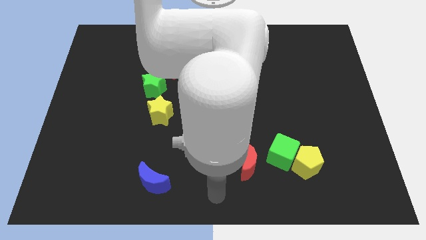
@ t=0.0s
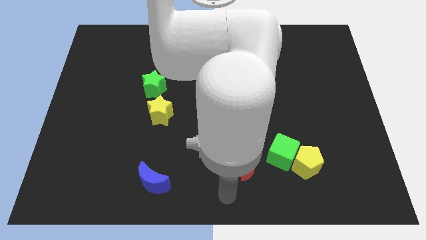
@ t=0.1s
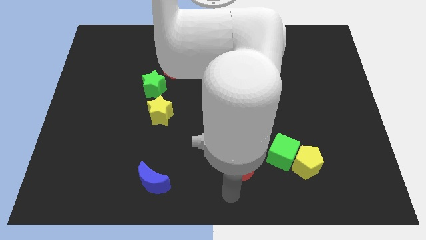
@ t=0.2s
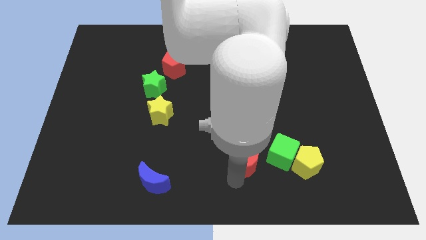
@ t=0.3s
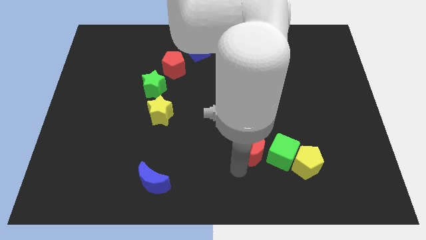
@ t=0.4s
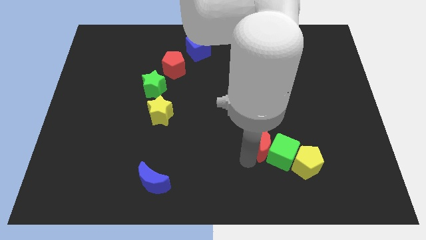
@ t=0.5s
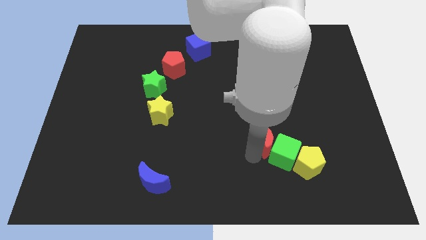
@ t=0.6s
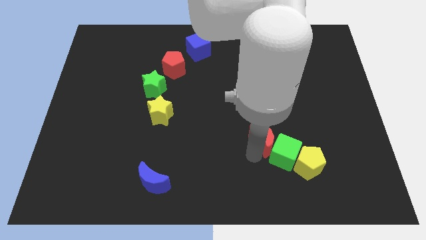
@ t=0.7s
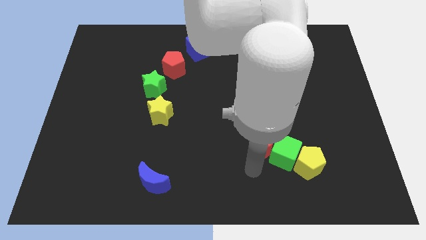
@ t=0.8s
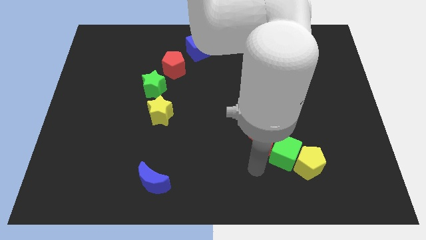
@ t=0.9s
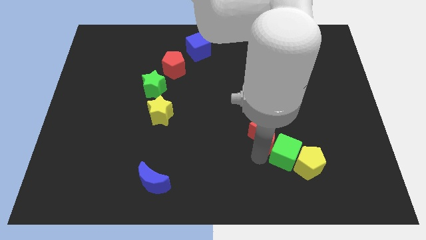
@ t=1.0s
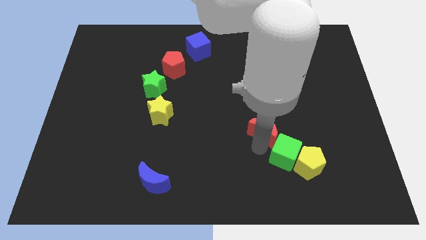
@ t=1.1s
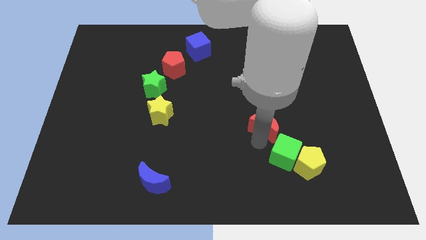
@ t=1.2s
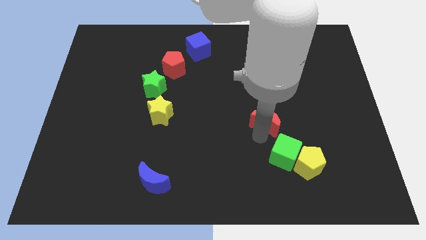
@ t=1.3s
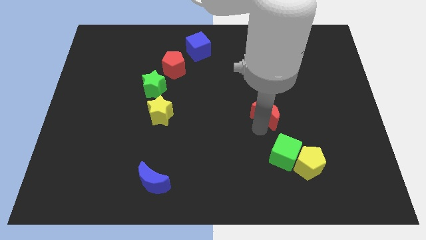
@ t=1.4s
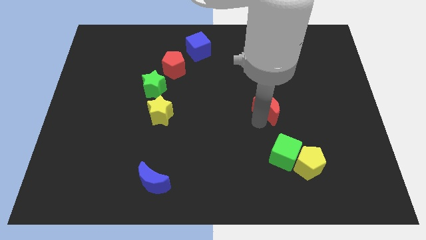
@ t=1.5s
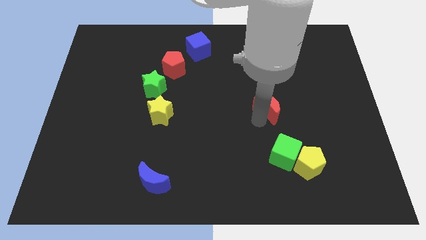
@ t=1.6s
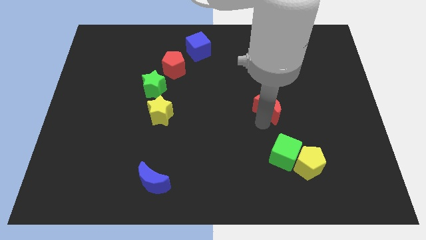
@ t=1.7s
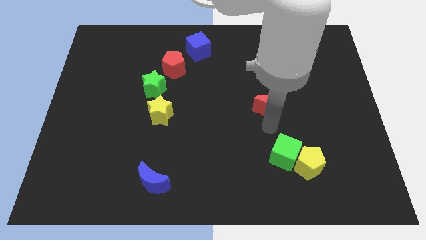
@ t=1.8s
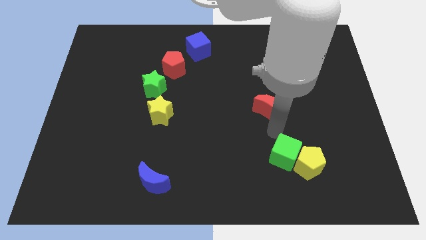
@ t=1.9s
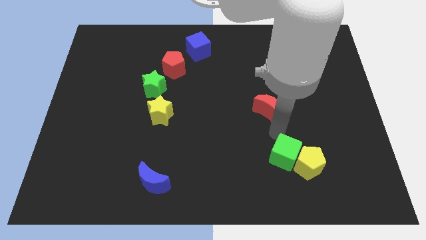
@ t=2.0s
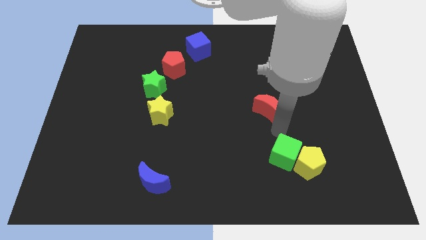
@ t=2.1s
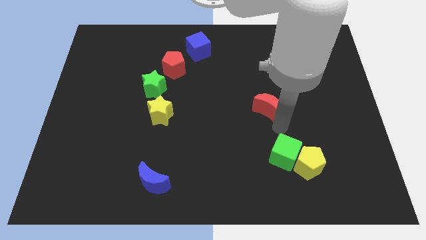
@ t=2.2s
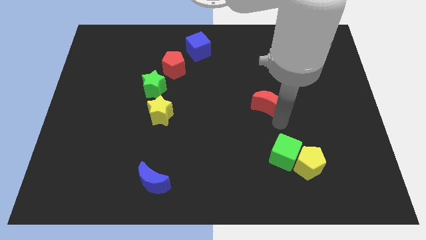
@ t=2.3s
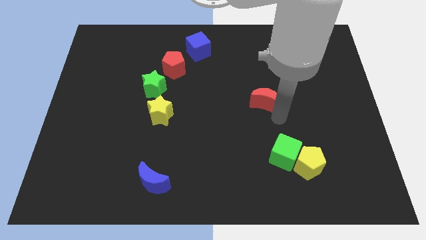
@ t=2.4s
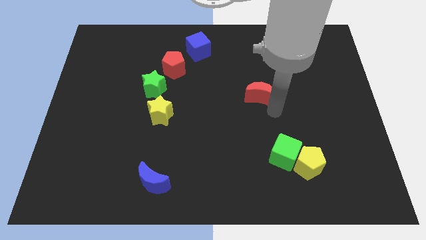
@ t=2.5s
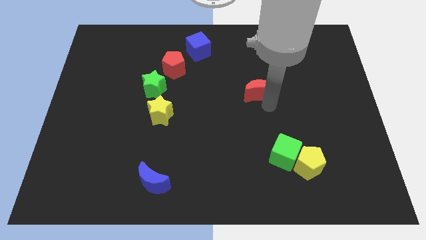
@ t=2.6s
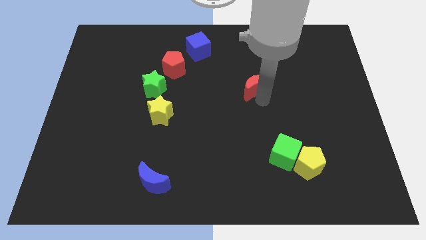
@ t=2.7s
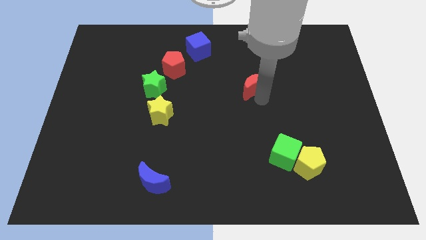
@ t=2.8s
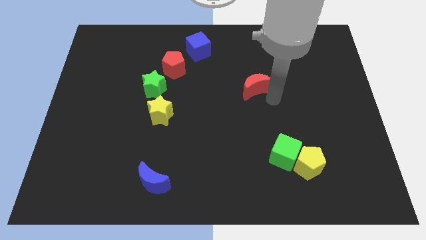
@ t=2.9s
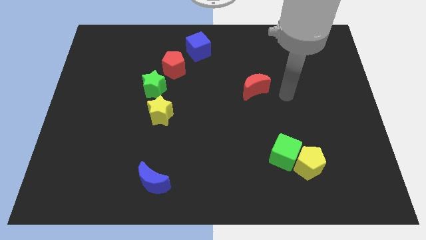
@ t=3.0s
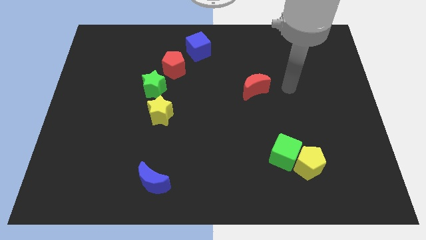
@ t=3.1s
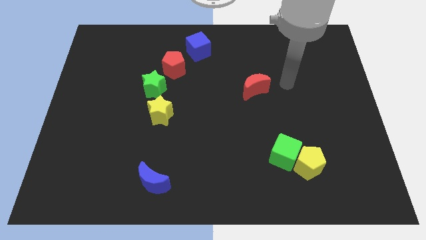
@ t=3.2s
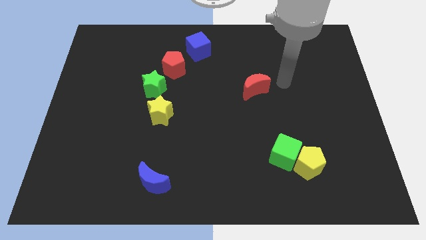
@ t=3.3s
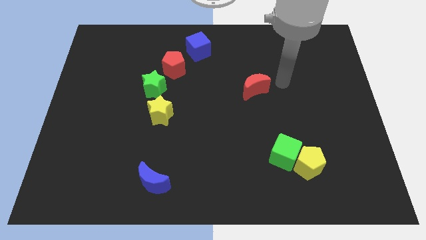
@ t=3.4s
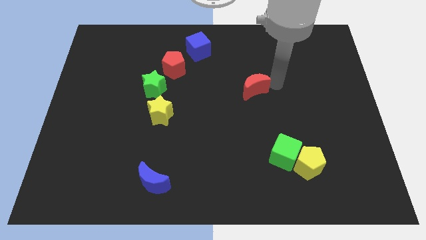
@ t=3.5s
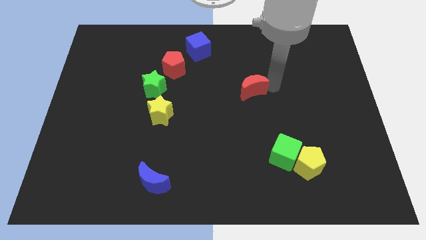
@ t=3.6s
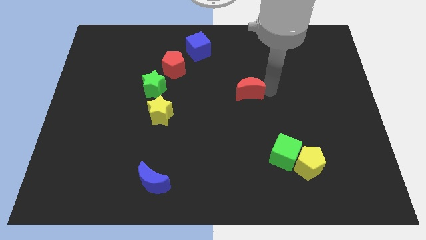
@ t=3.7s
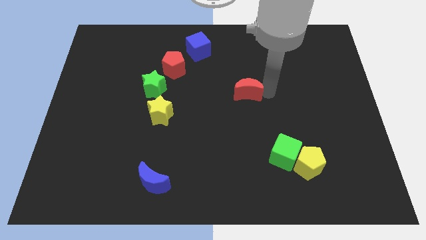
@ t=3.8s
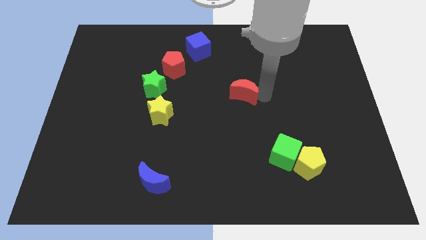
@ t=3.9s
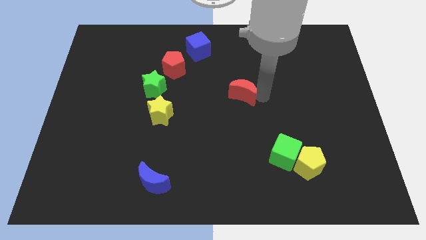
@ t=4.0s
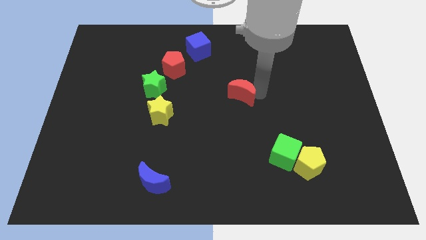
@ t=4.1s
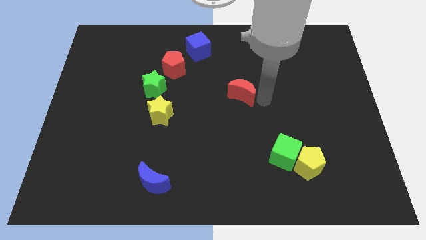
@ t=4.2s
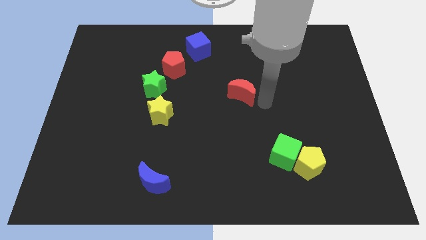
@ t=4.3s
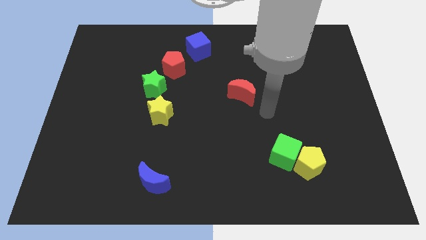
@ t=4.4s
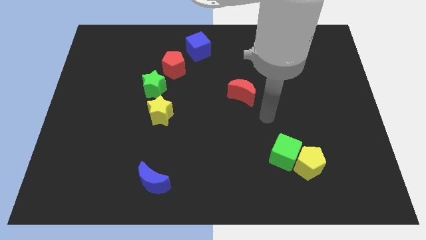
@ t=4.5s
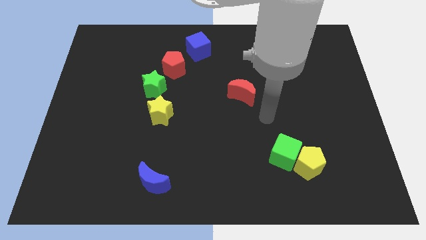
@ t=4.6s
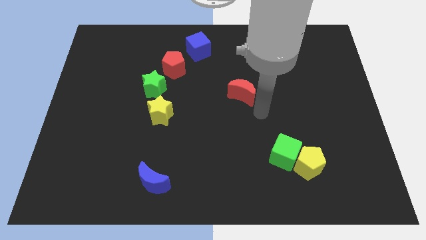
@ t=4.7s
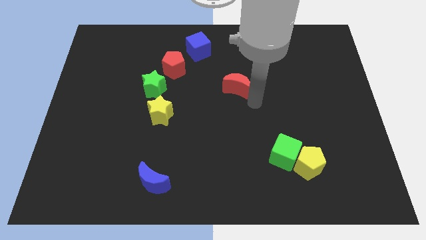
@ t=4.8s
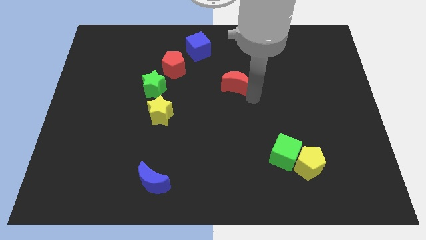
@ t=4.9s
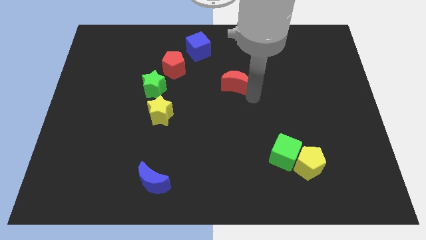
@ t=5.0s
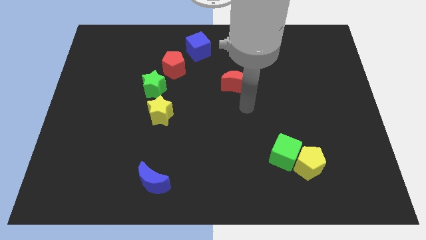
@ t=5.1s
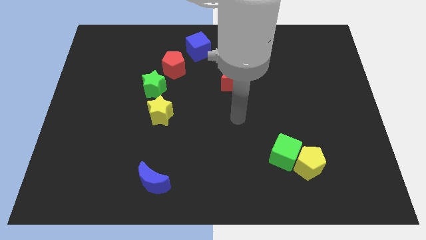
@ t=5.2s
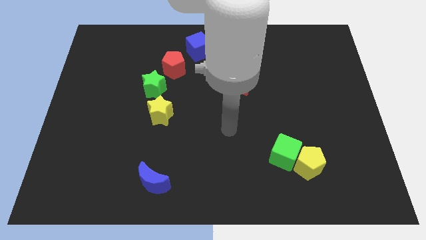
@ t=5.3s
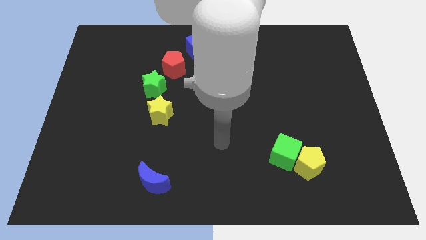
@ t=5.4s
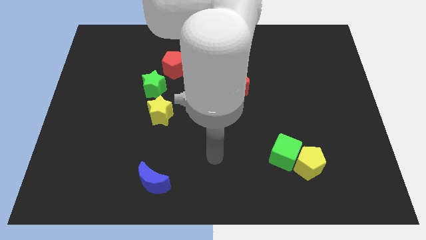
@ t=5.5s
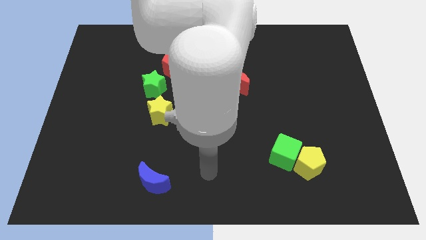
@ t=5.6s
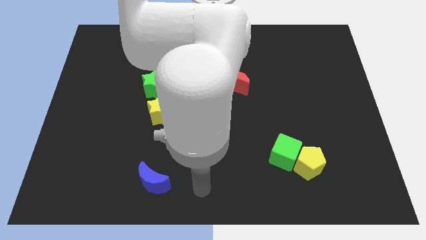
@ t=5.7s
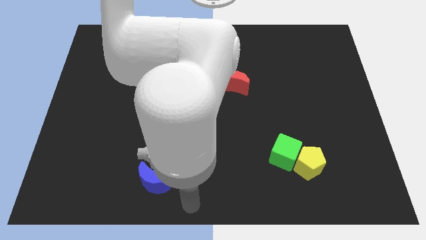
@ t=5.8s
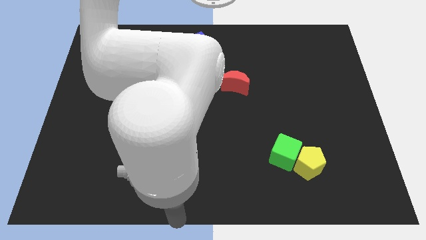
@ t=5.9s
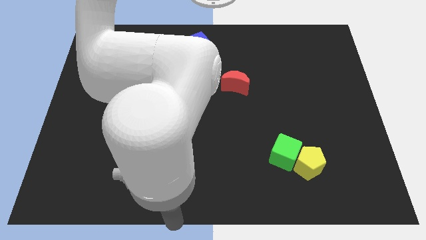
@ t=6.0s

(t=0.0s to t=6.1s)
place the red crescent at the center of the board

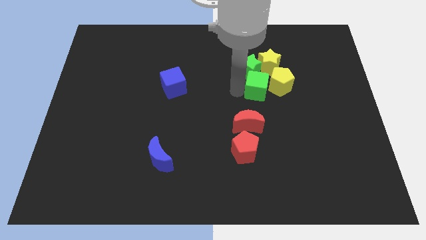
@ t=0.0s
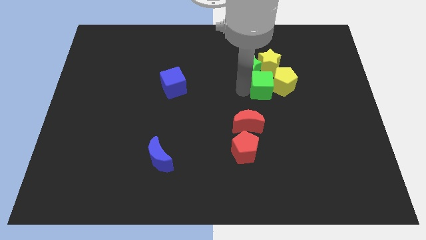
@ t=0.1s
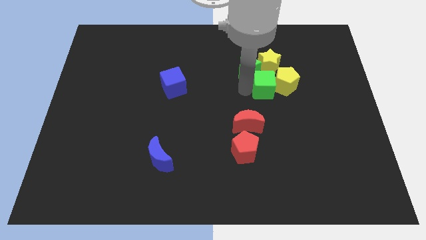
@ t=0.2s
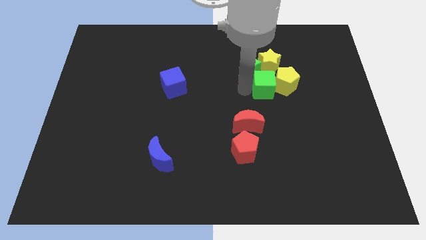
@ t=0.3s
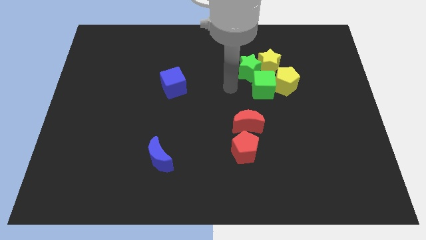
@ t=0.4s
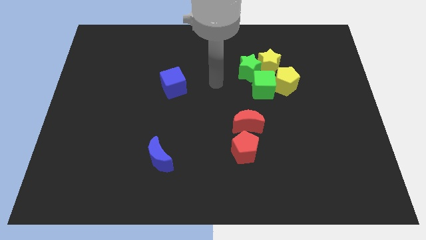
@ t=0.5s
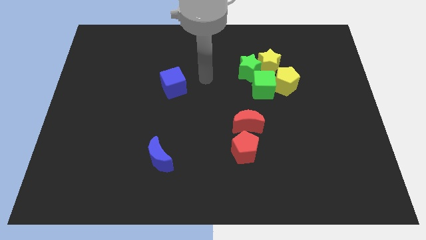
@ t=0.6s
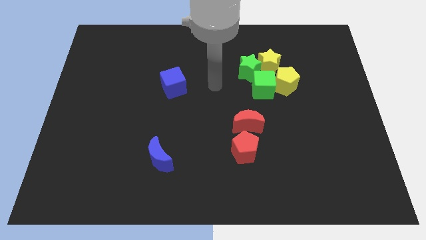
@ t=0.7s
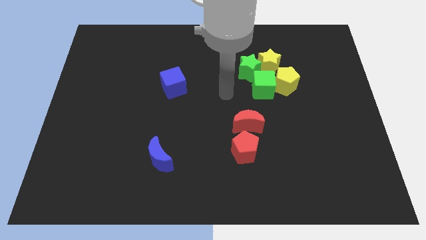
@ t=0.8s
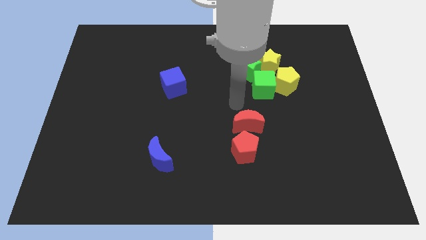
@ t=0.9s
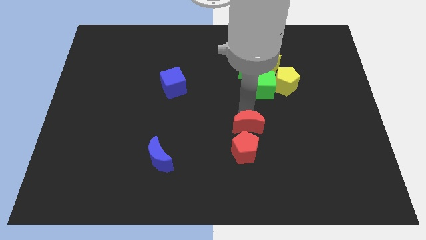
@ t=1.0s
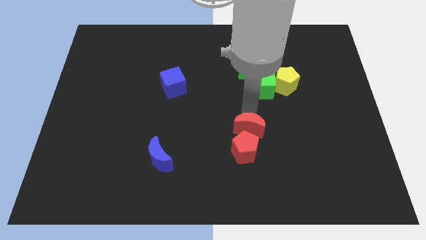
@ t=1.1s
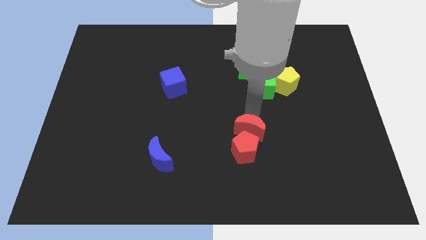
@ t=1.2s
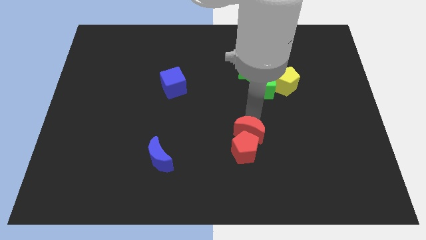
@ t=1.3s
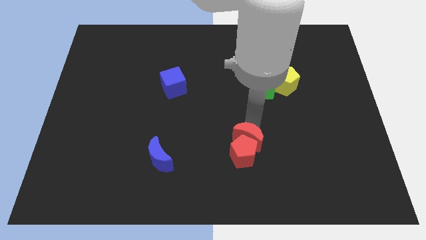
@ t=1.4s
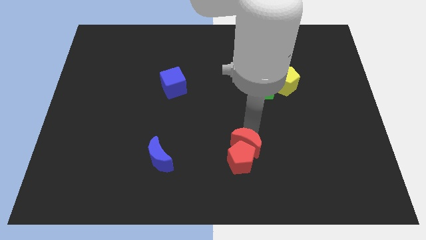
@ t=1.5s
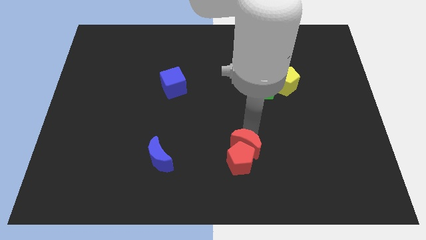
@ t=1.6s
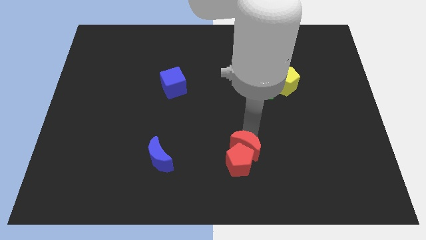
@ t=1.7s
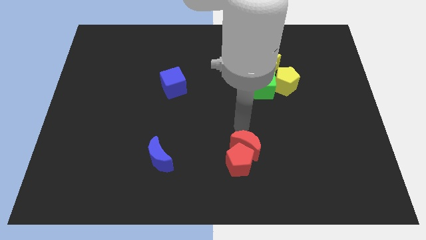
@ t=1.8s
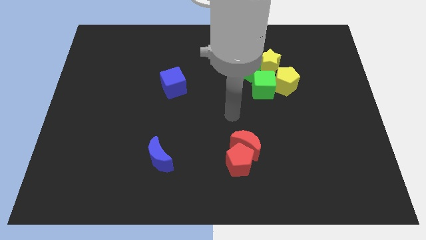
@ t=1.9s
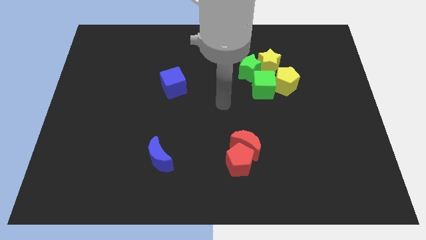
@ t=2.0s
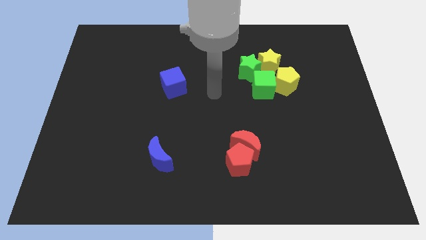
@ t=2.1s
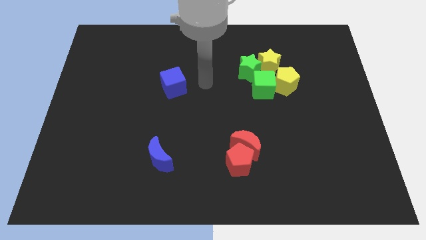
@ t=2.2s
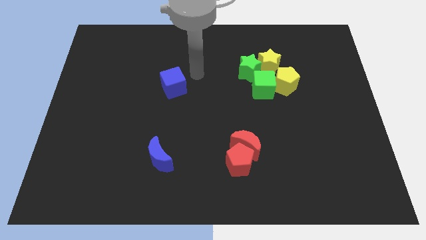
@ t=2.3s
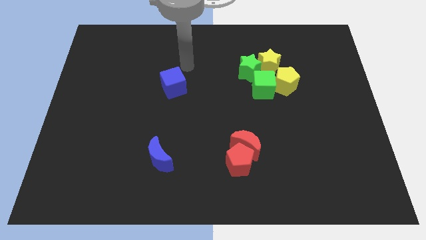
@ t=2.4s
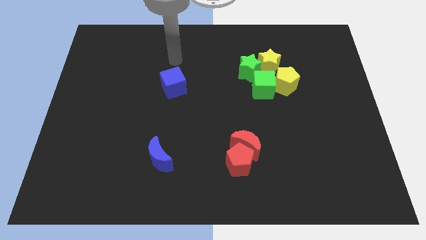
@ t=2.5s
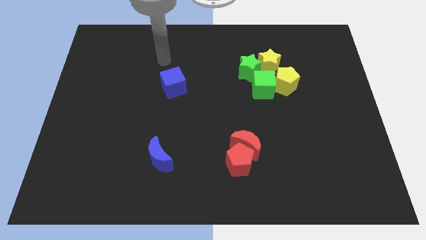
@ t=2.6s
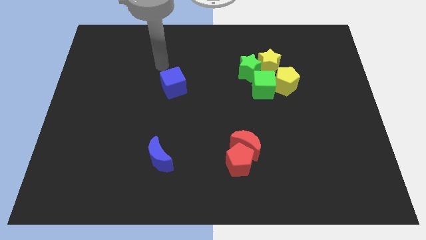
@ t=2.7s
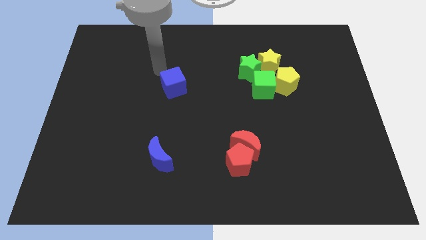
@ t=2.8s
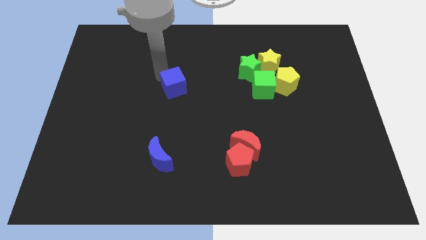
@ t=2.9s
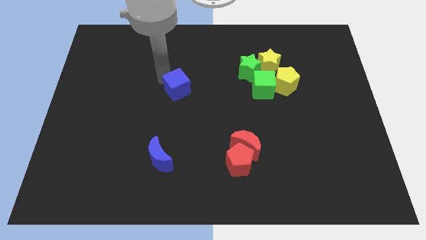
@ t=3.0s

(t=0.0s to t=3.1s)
move the red moon into the red pentagon
